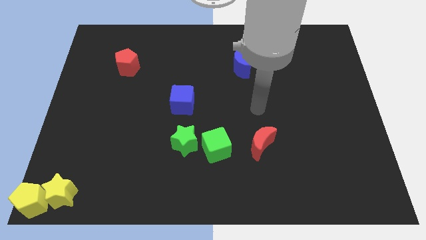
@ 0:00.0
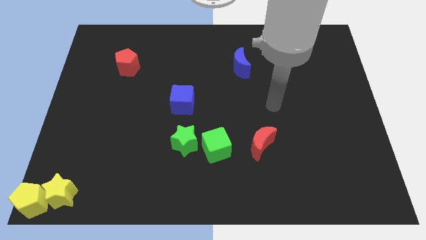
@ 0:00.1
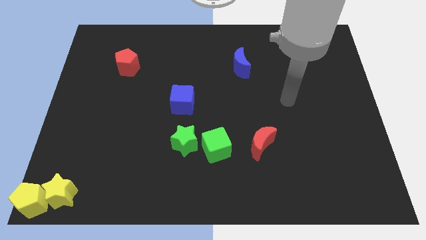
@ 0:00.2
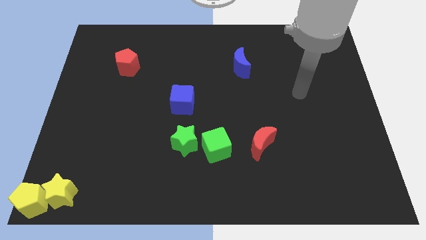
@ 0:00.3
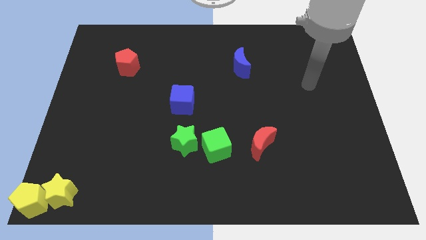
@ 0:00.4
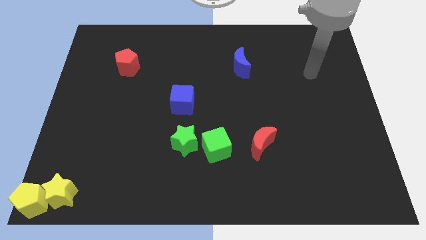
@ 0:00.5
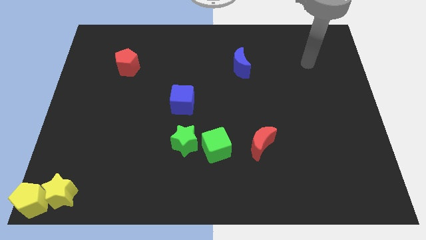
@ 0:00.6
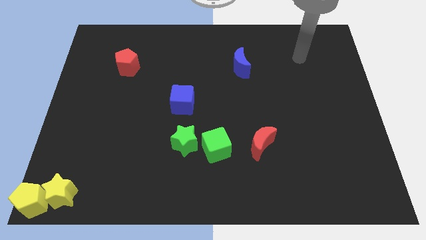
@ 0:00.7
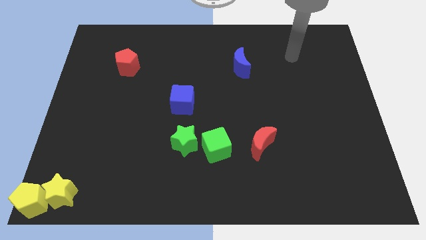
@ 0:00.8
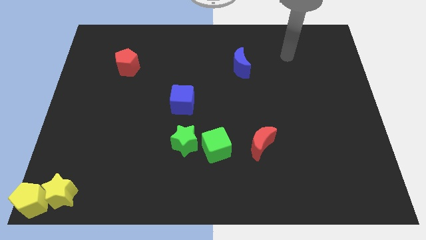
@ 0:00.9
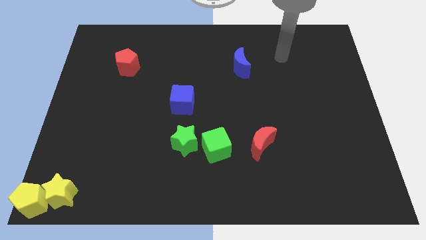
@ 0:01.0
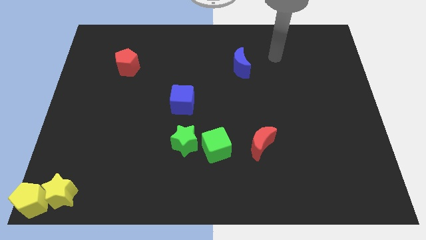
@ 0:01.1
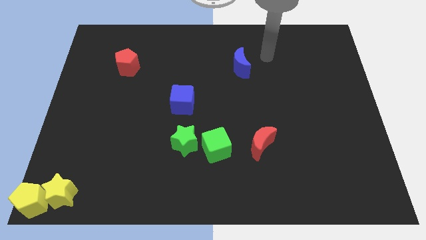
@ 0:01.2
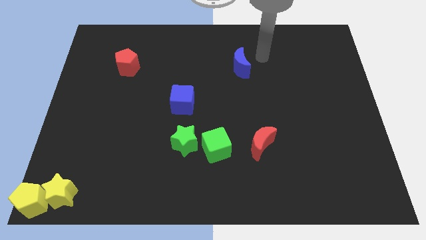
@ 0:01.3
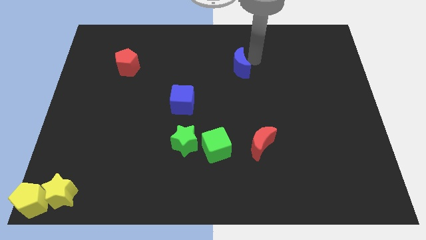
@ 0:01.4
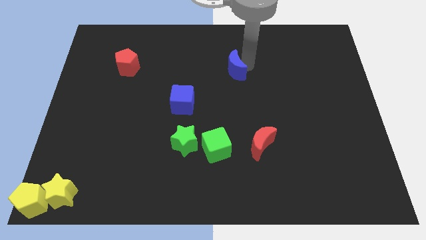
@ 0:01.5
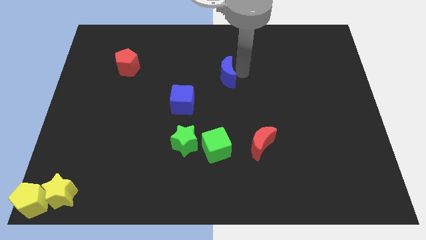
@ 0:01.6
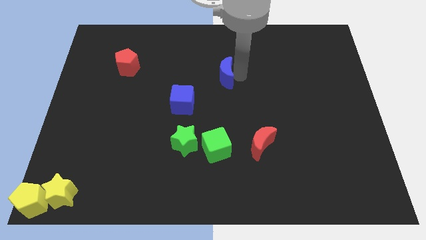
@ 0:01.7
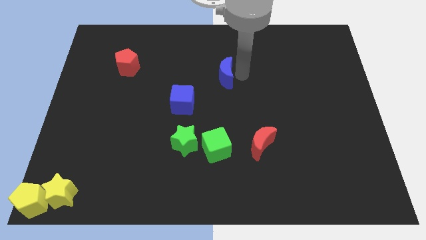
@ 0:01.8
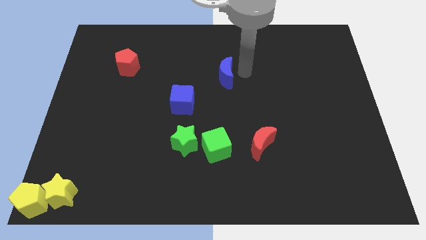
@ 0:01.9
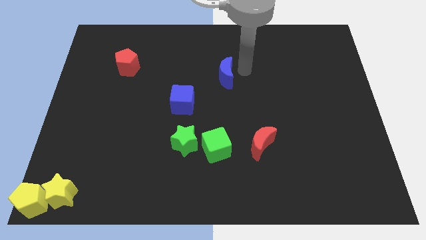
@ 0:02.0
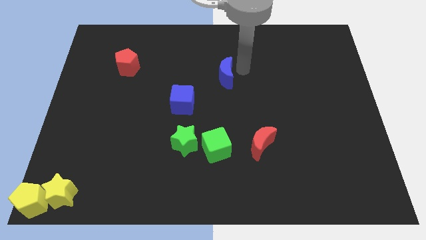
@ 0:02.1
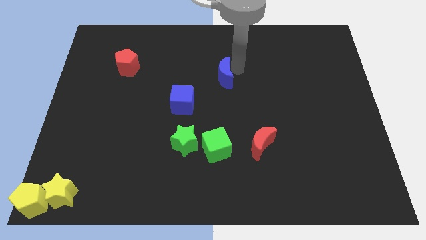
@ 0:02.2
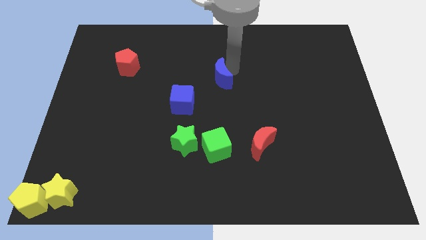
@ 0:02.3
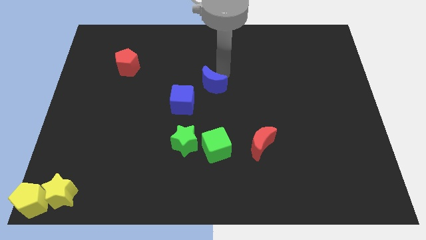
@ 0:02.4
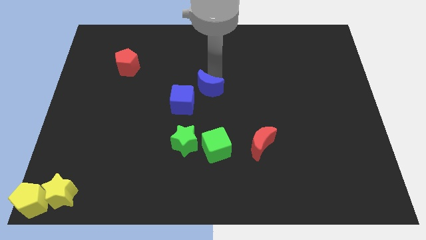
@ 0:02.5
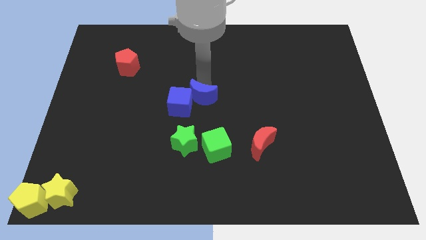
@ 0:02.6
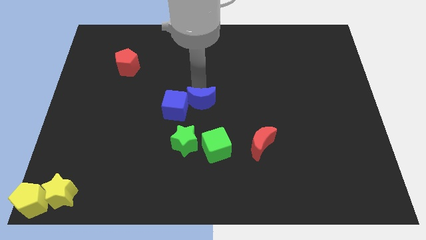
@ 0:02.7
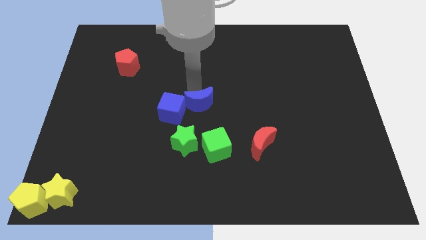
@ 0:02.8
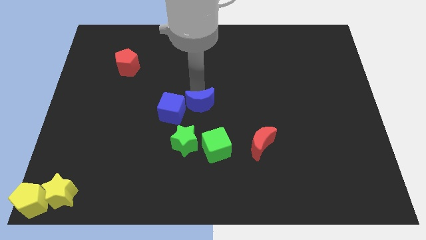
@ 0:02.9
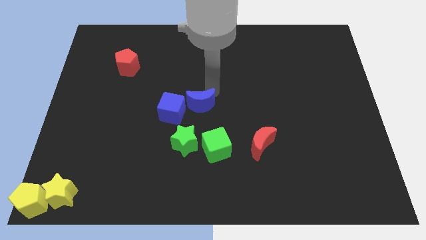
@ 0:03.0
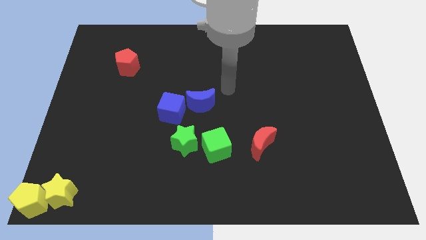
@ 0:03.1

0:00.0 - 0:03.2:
push the blue crescent to the right of the blue cube

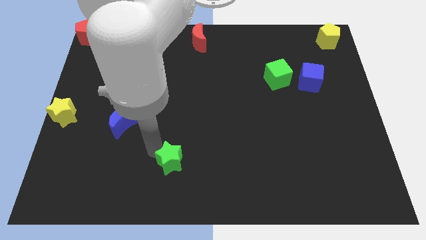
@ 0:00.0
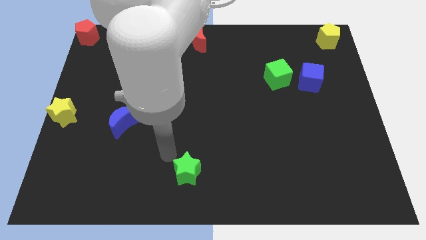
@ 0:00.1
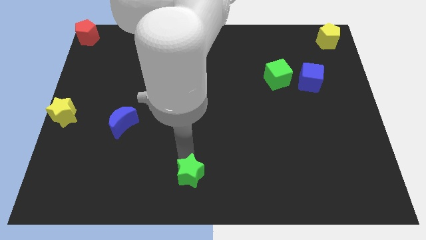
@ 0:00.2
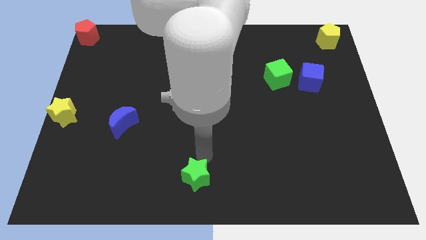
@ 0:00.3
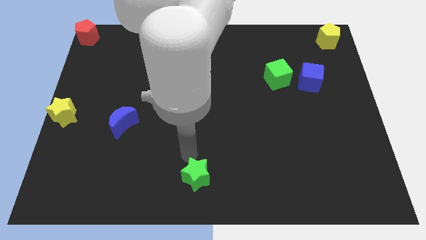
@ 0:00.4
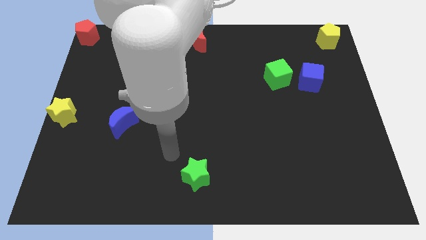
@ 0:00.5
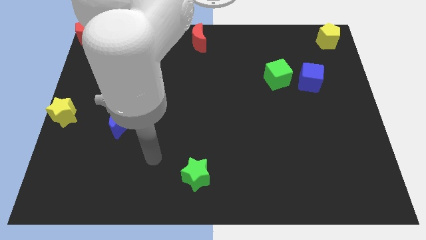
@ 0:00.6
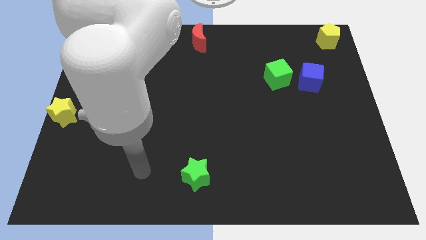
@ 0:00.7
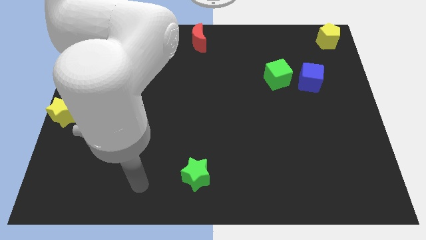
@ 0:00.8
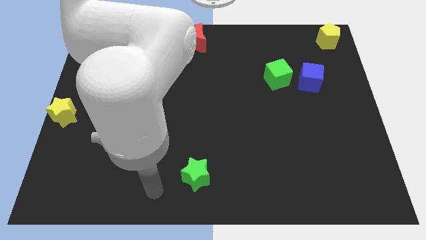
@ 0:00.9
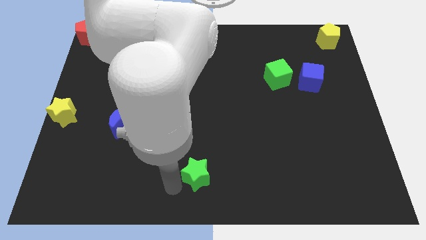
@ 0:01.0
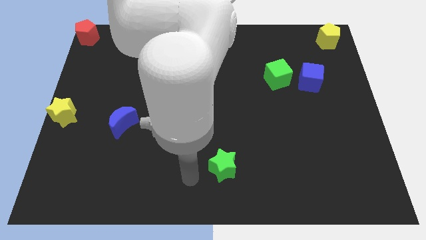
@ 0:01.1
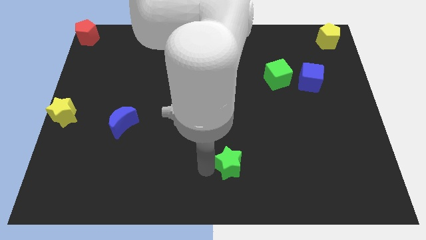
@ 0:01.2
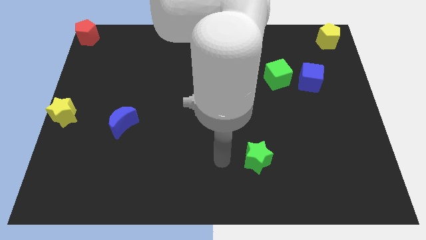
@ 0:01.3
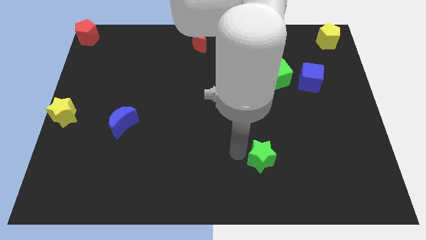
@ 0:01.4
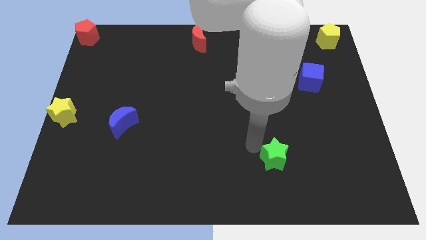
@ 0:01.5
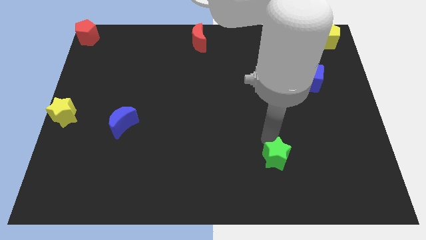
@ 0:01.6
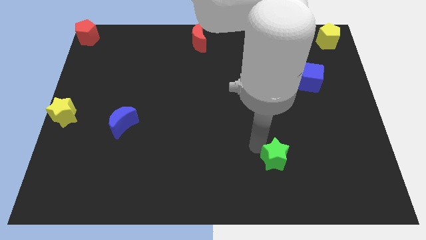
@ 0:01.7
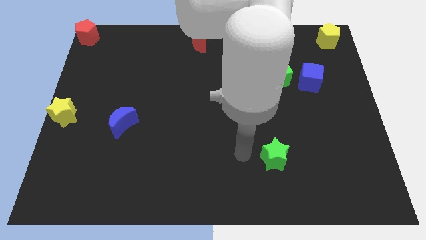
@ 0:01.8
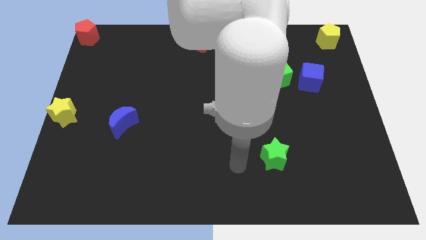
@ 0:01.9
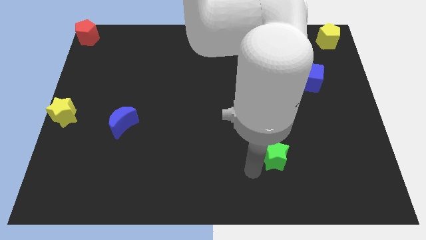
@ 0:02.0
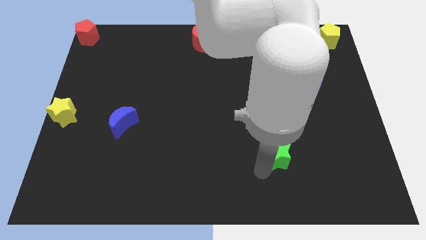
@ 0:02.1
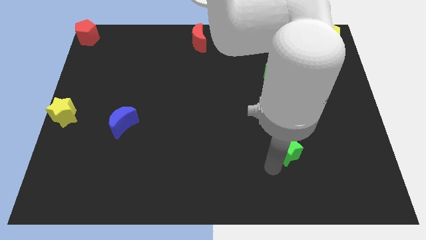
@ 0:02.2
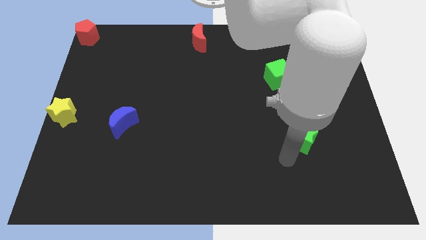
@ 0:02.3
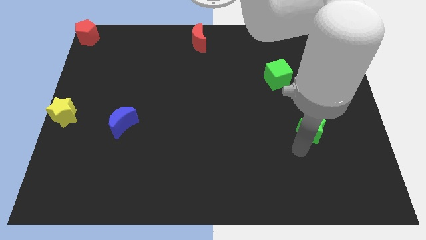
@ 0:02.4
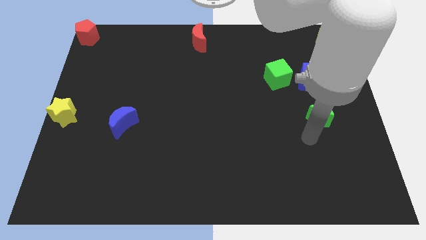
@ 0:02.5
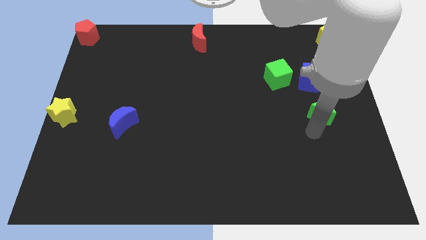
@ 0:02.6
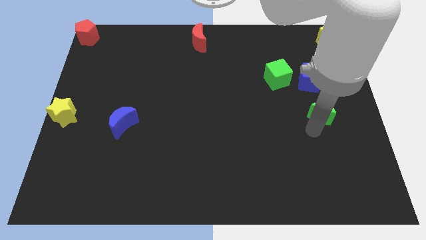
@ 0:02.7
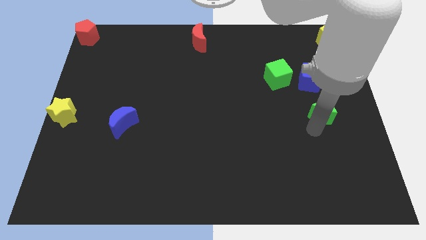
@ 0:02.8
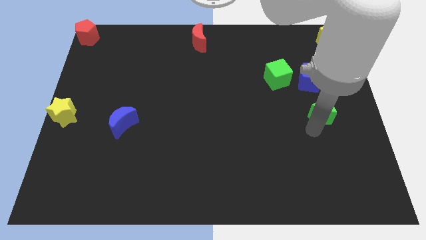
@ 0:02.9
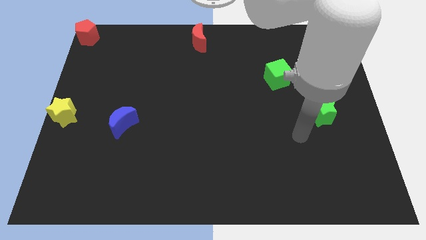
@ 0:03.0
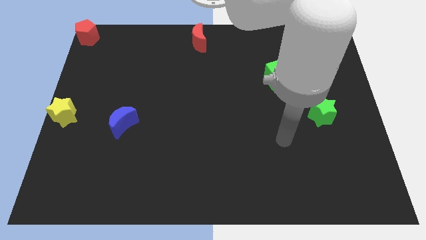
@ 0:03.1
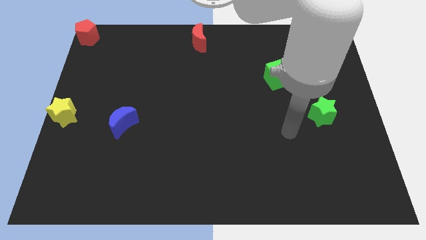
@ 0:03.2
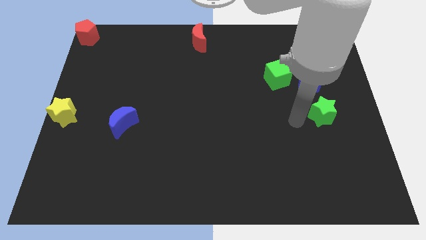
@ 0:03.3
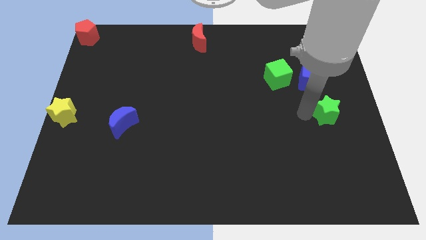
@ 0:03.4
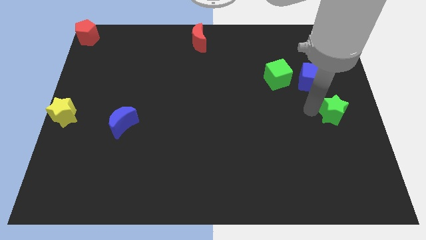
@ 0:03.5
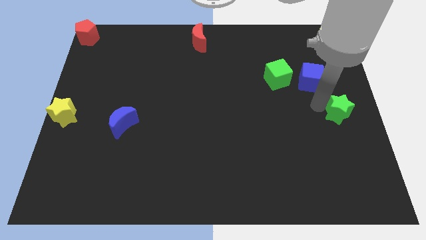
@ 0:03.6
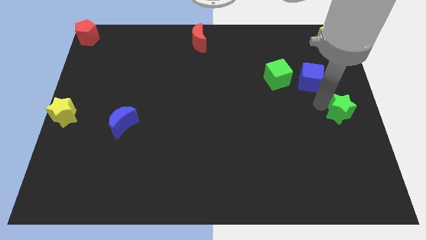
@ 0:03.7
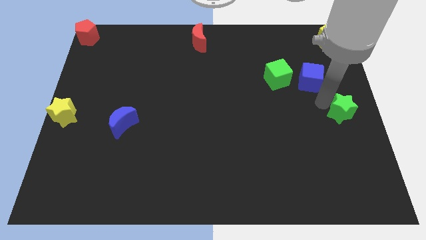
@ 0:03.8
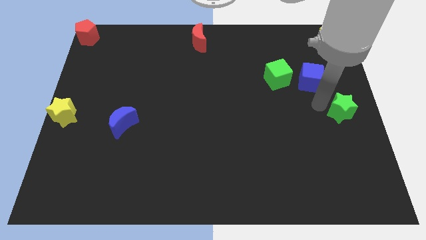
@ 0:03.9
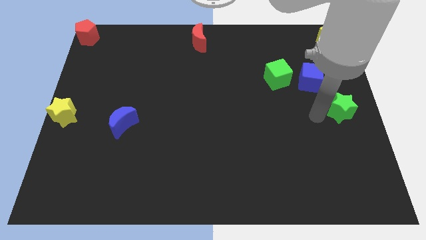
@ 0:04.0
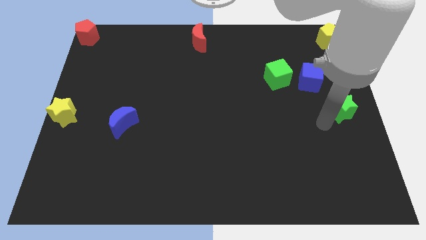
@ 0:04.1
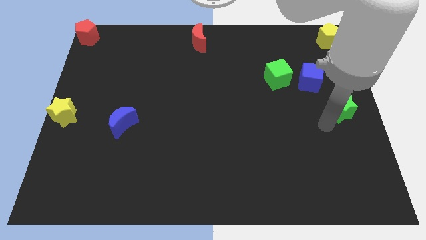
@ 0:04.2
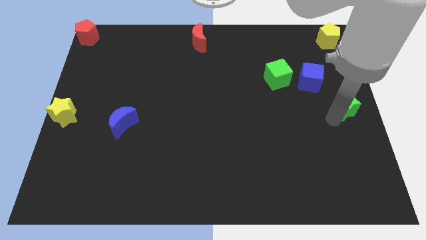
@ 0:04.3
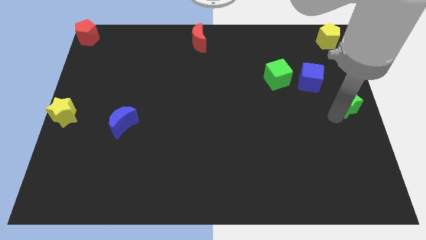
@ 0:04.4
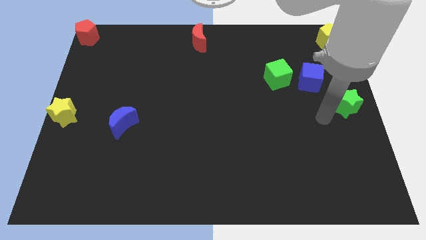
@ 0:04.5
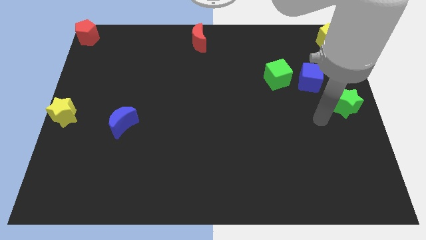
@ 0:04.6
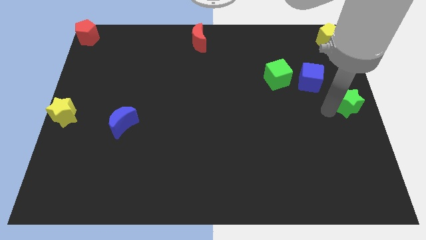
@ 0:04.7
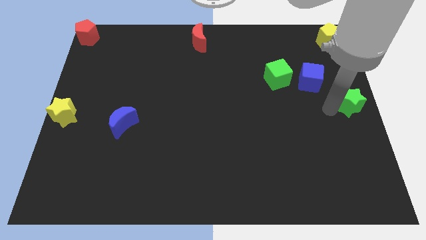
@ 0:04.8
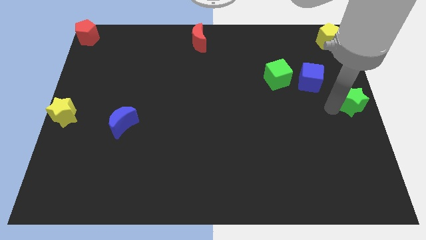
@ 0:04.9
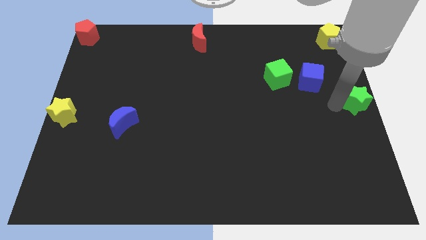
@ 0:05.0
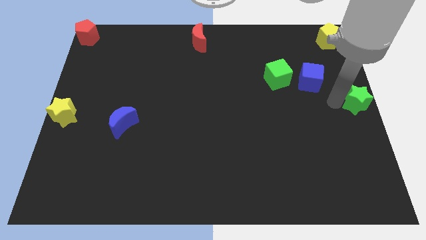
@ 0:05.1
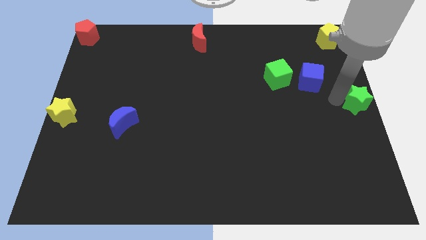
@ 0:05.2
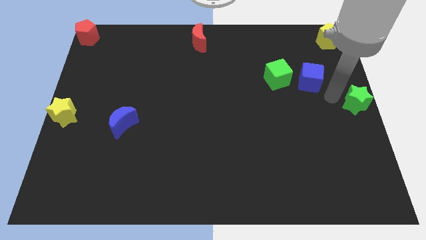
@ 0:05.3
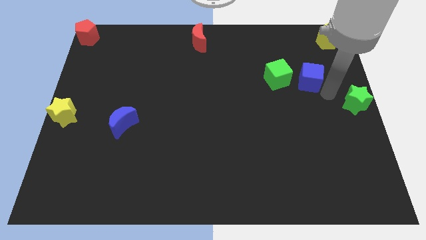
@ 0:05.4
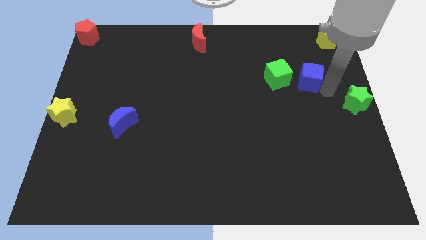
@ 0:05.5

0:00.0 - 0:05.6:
move the green star to the right center of the board

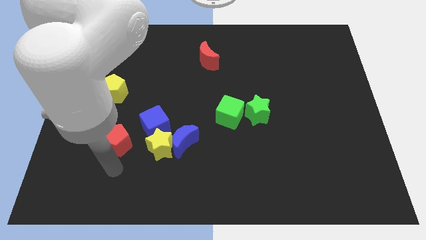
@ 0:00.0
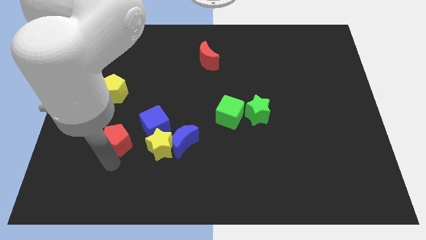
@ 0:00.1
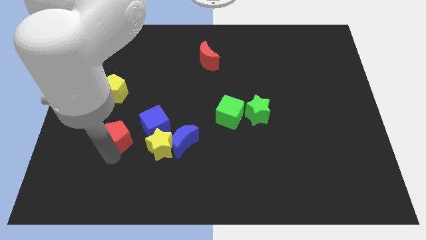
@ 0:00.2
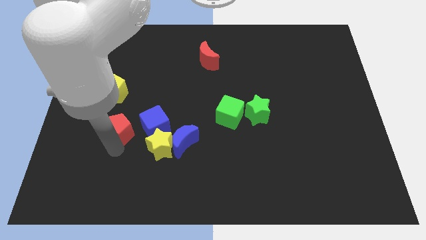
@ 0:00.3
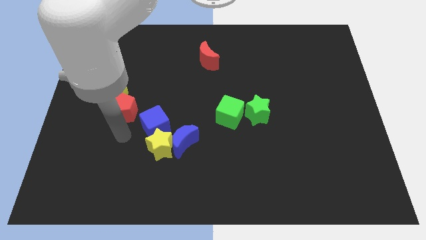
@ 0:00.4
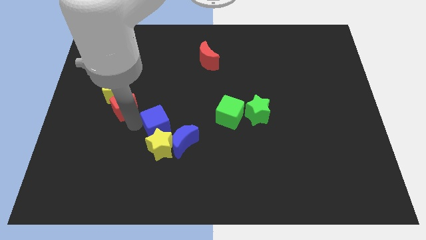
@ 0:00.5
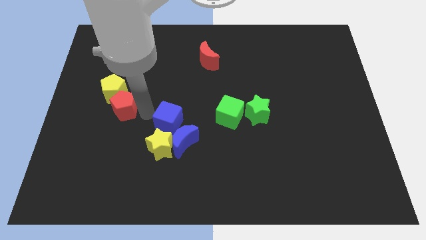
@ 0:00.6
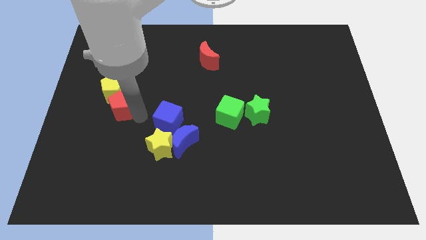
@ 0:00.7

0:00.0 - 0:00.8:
move the red pentagon below the yellow pentagon
